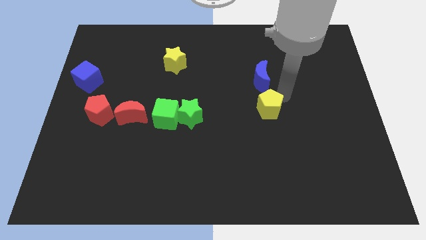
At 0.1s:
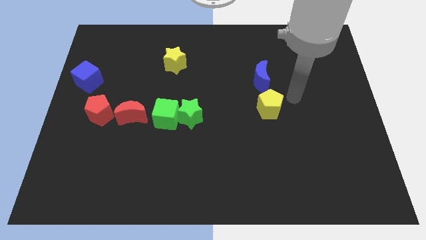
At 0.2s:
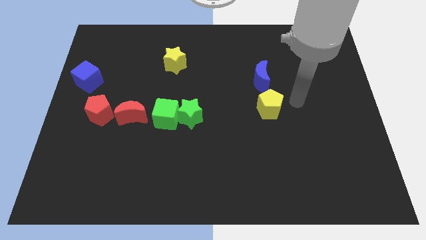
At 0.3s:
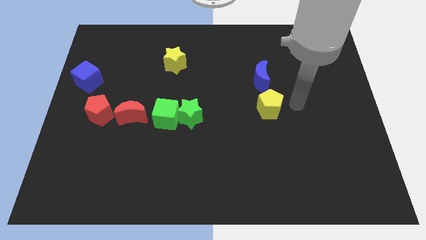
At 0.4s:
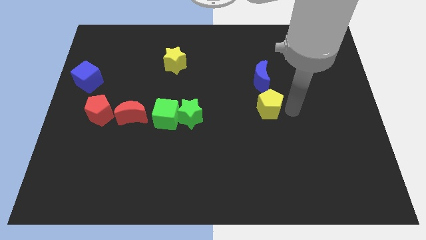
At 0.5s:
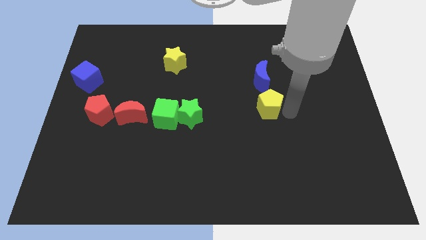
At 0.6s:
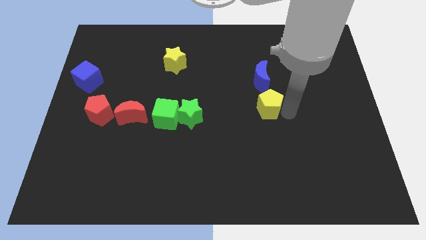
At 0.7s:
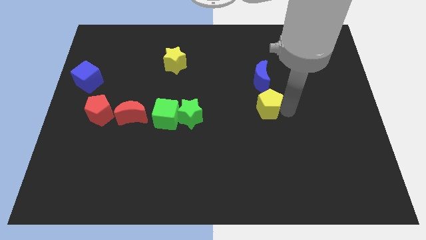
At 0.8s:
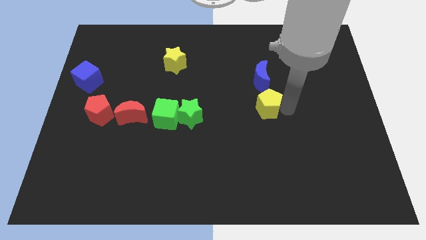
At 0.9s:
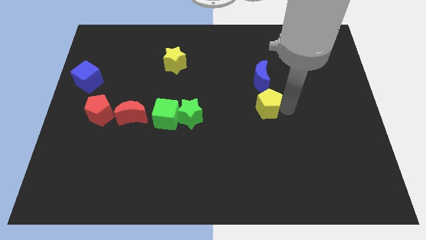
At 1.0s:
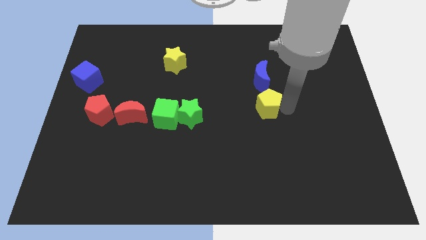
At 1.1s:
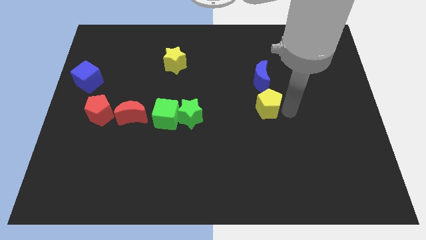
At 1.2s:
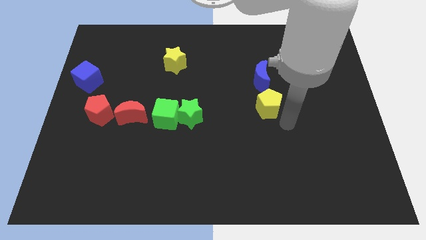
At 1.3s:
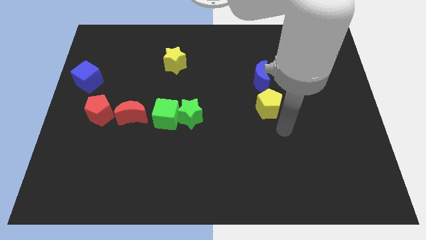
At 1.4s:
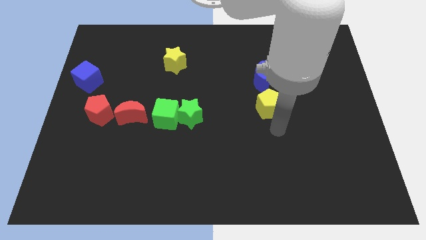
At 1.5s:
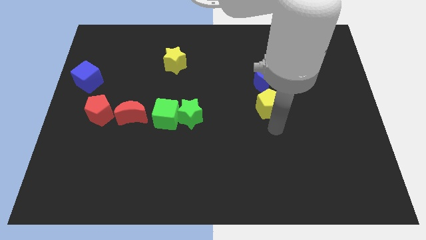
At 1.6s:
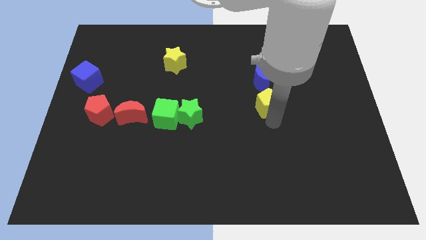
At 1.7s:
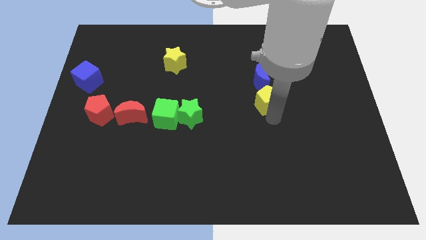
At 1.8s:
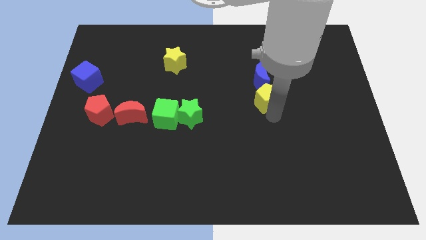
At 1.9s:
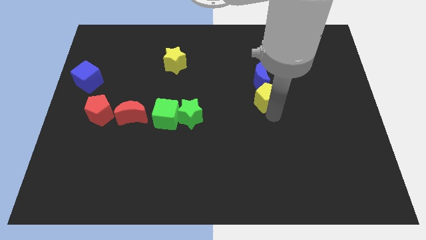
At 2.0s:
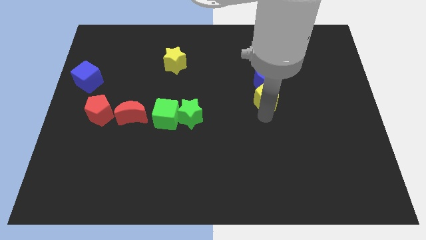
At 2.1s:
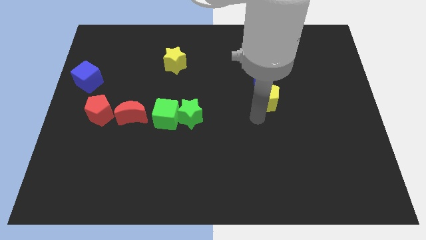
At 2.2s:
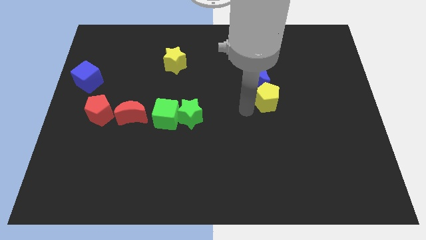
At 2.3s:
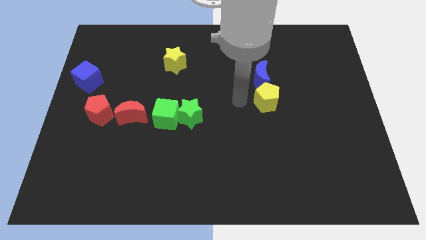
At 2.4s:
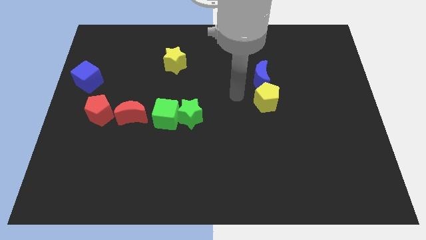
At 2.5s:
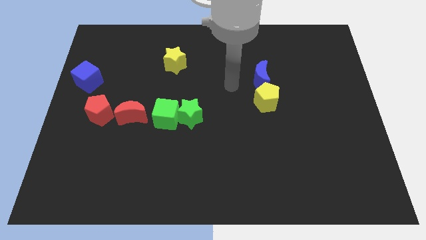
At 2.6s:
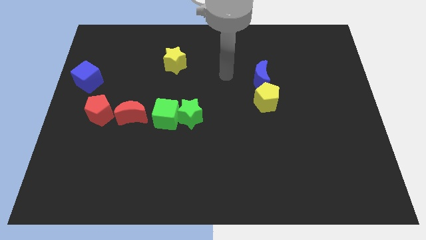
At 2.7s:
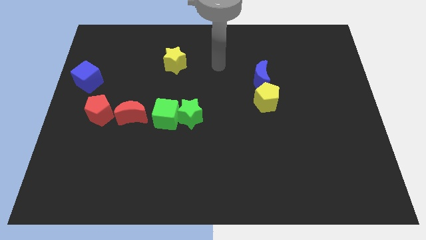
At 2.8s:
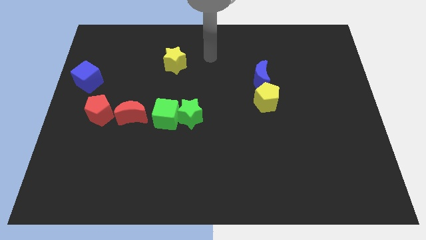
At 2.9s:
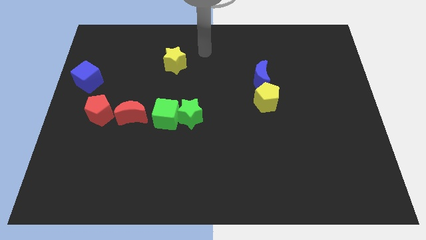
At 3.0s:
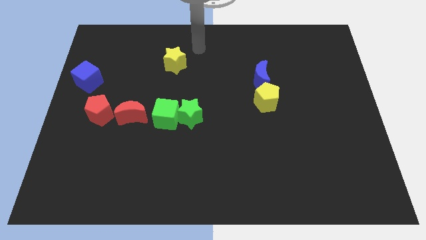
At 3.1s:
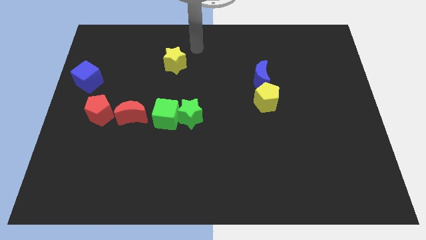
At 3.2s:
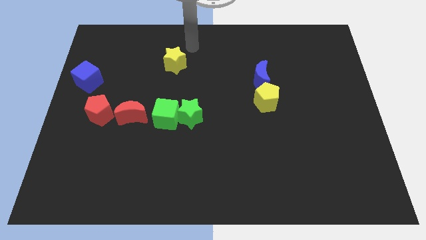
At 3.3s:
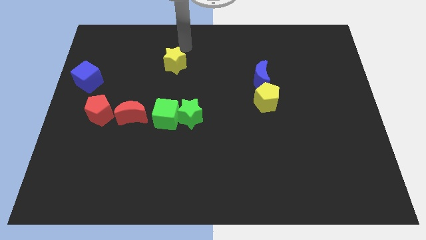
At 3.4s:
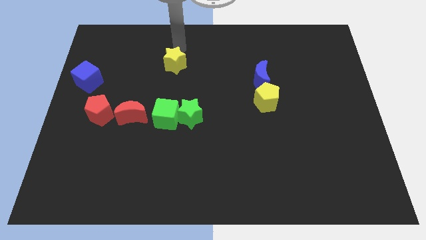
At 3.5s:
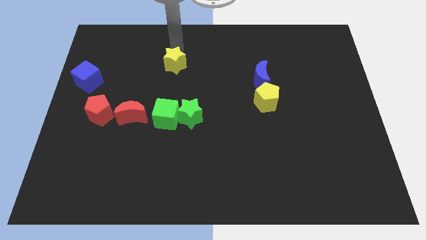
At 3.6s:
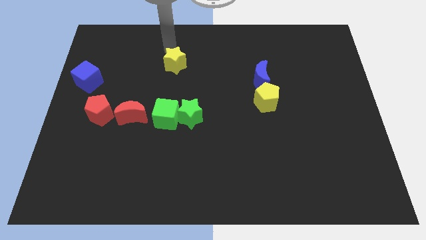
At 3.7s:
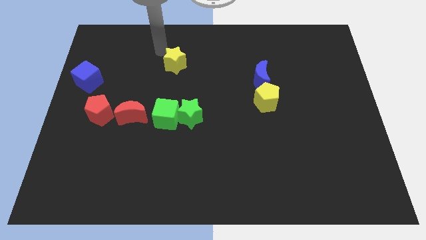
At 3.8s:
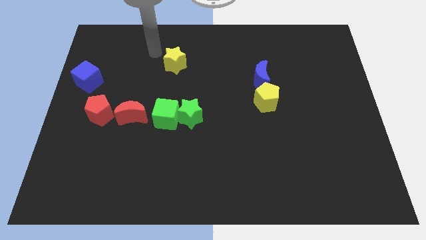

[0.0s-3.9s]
push the yellow pentagon close to the blue crescent and move away from it

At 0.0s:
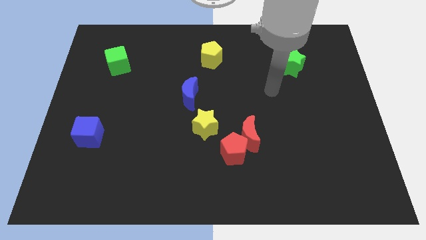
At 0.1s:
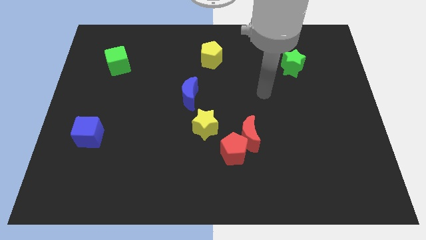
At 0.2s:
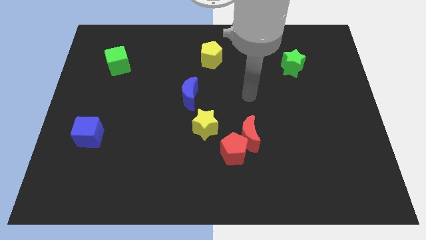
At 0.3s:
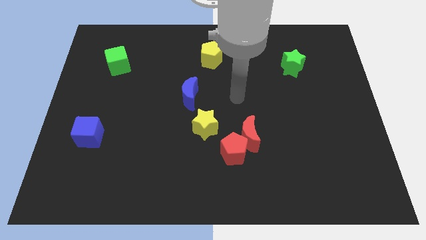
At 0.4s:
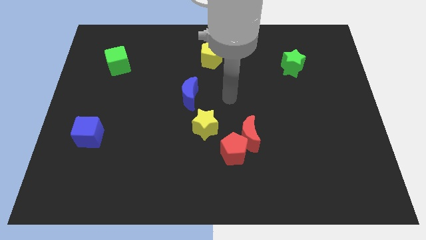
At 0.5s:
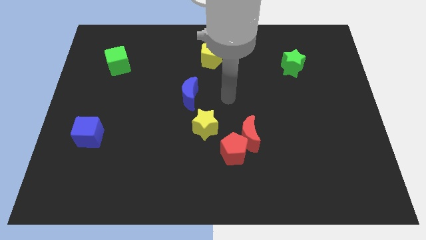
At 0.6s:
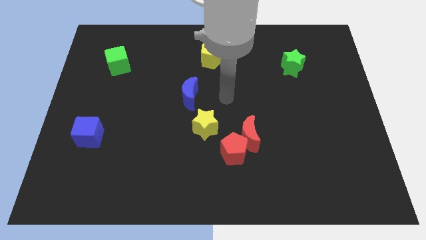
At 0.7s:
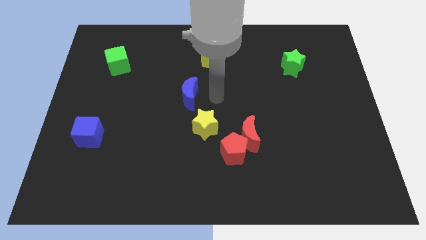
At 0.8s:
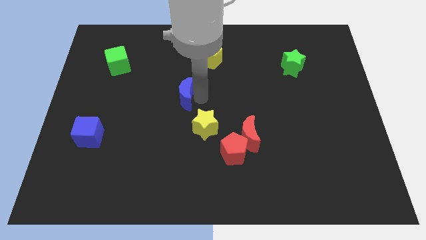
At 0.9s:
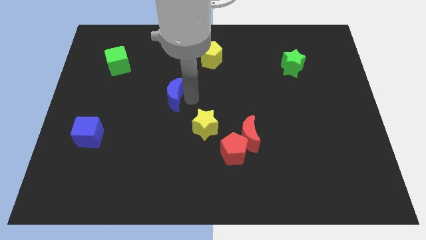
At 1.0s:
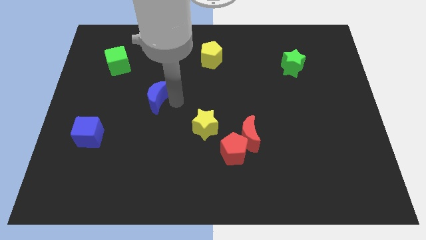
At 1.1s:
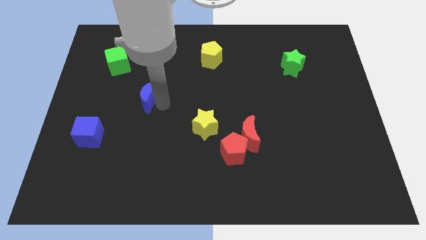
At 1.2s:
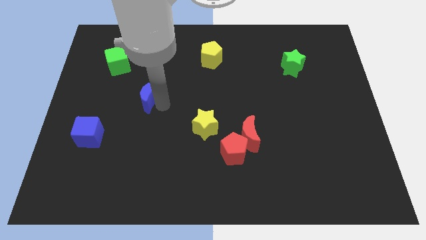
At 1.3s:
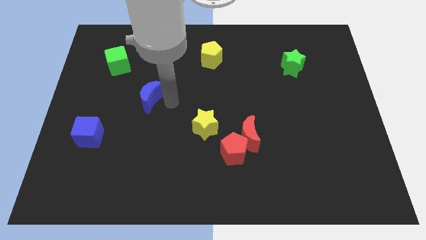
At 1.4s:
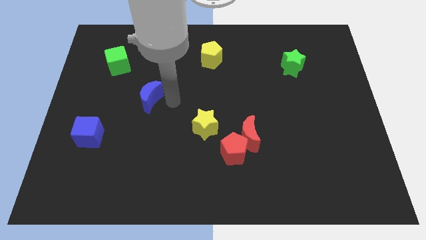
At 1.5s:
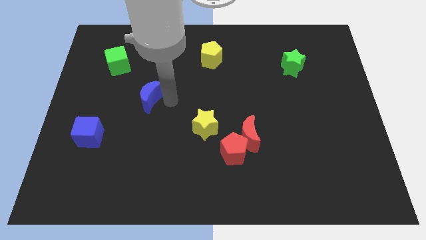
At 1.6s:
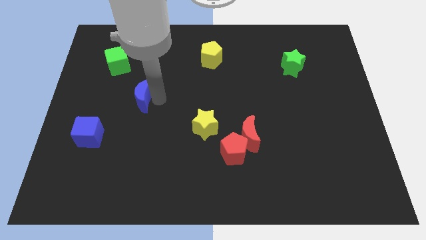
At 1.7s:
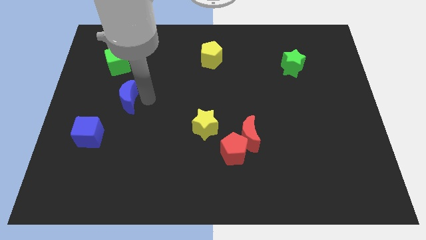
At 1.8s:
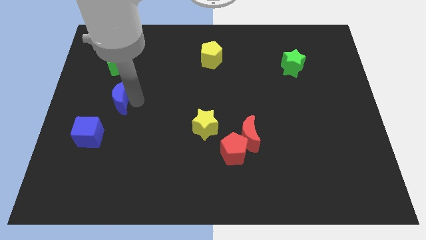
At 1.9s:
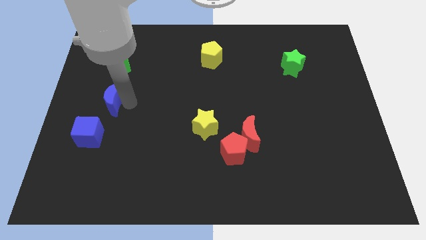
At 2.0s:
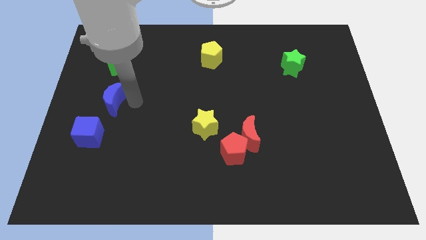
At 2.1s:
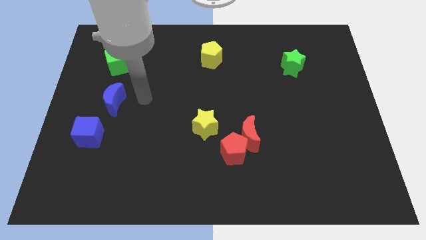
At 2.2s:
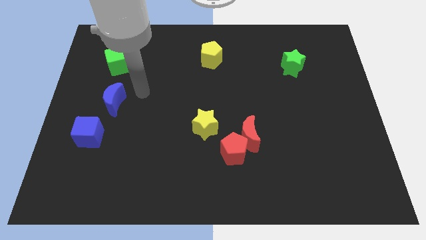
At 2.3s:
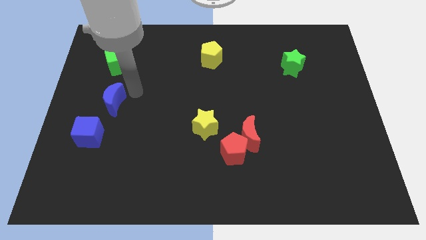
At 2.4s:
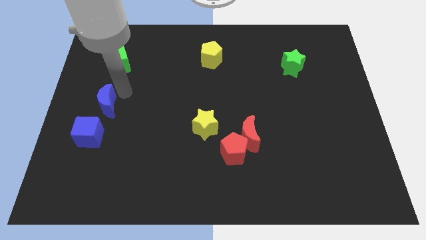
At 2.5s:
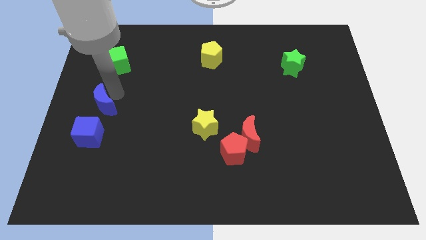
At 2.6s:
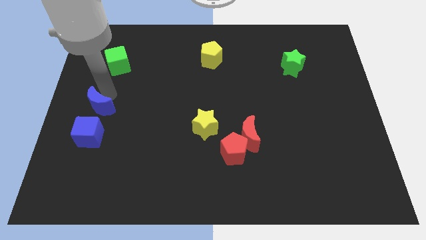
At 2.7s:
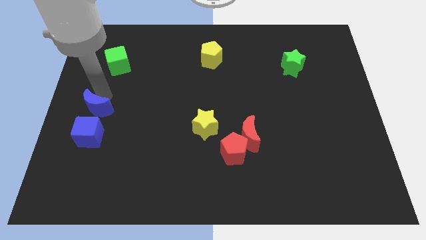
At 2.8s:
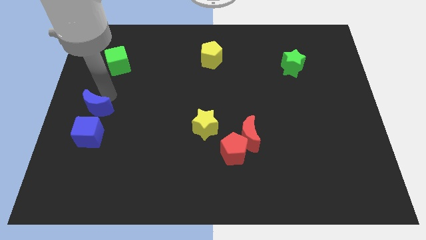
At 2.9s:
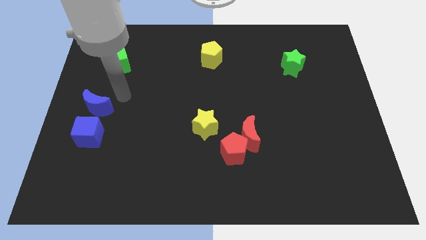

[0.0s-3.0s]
push the blue crescent close to the blue cube

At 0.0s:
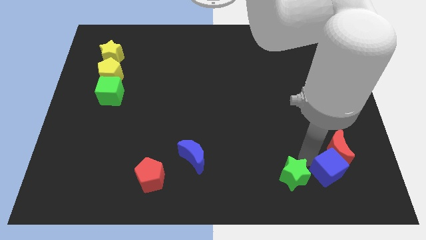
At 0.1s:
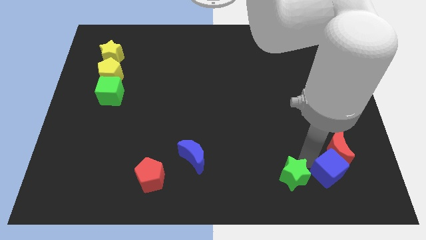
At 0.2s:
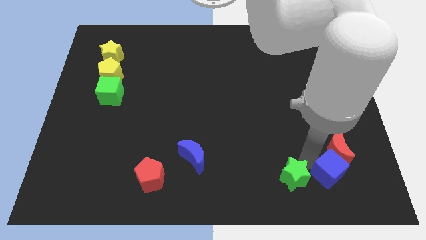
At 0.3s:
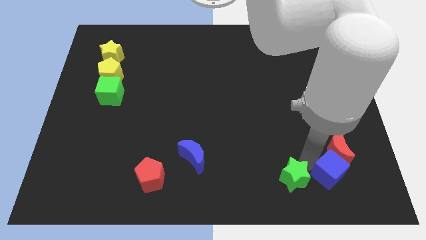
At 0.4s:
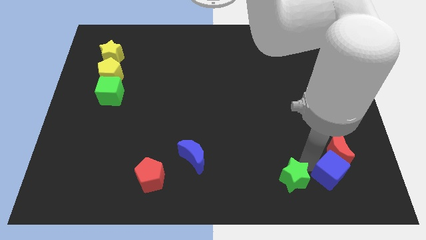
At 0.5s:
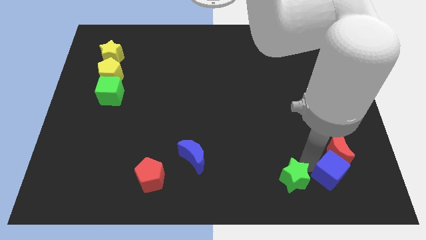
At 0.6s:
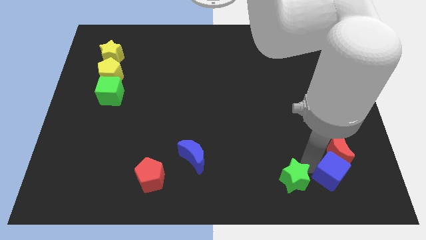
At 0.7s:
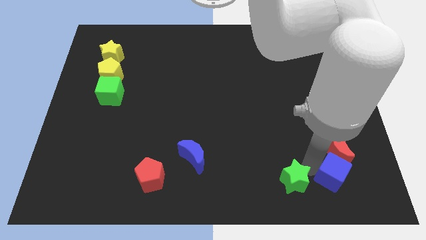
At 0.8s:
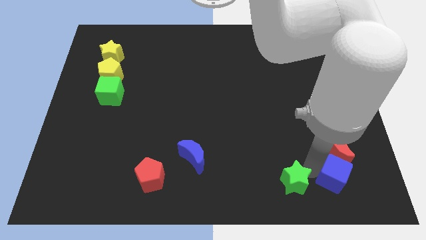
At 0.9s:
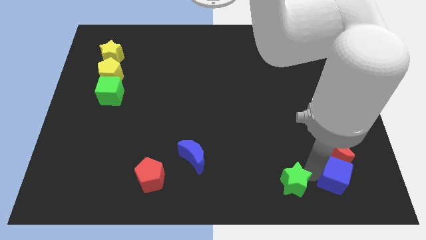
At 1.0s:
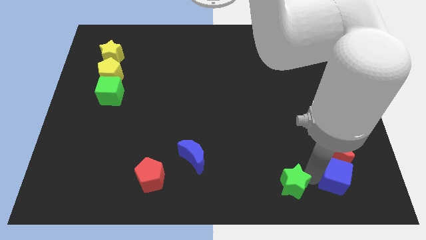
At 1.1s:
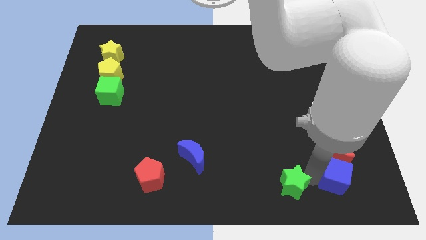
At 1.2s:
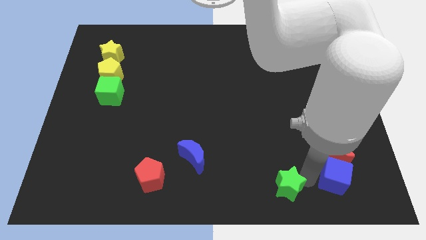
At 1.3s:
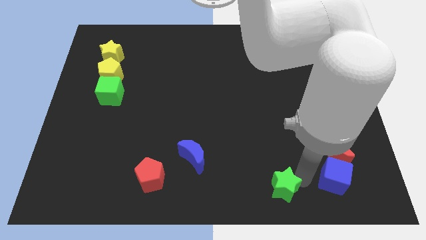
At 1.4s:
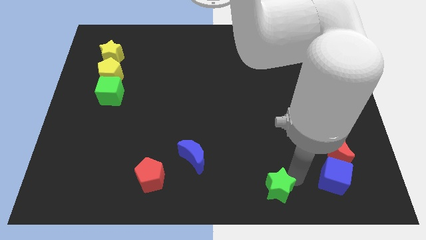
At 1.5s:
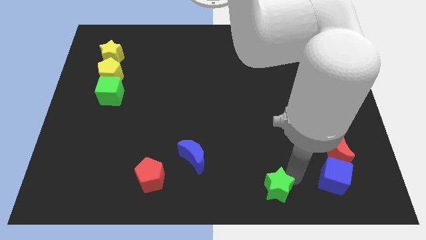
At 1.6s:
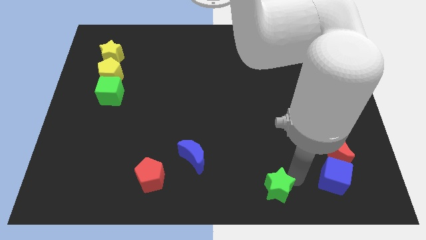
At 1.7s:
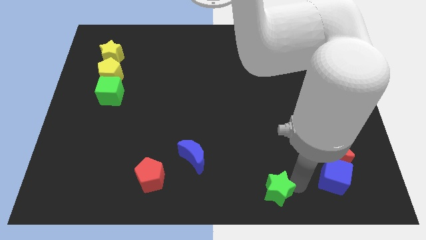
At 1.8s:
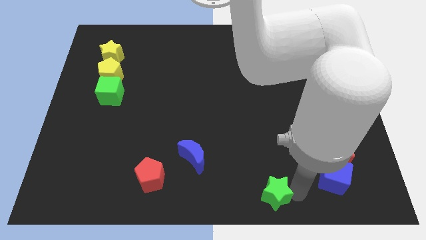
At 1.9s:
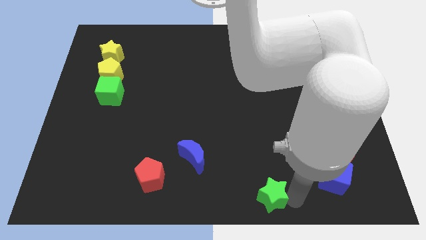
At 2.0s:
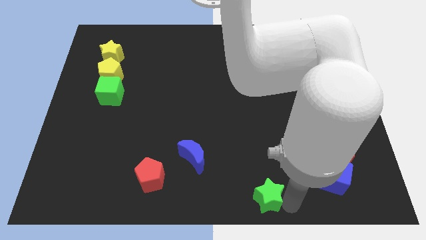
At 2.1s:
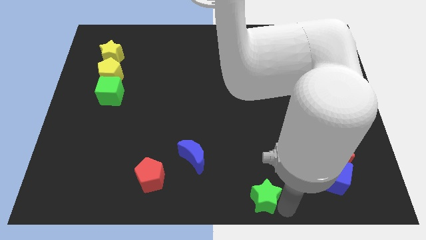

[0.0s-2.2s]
separate the green star from the blue cube
